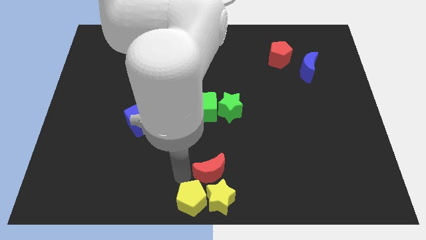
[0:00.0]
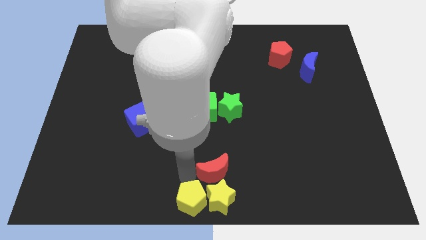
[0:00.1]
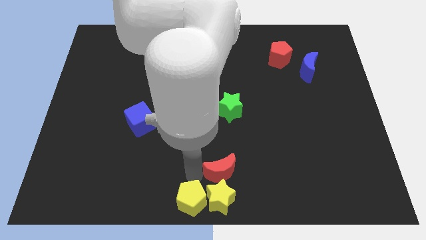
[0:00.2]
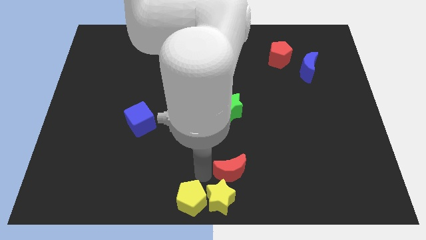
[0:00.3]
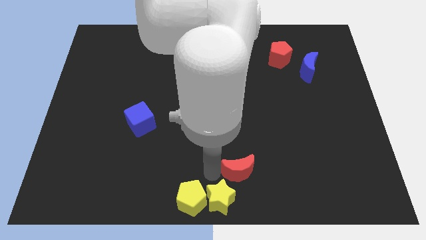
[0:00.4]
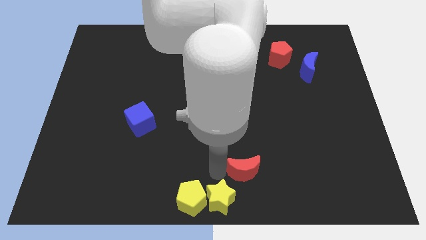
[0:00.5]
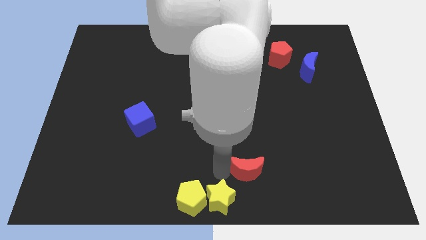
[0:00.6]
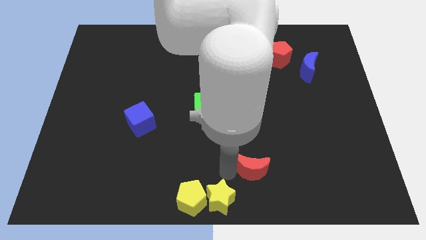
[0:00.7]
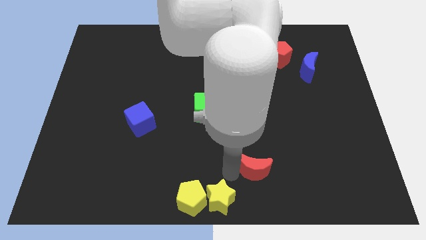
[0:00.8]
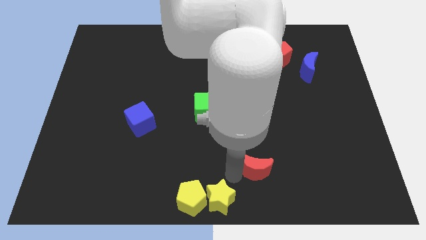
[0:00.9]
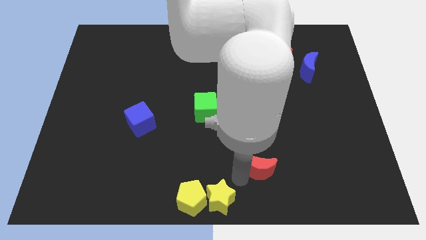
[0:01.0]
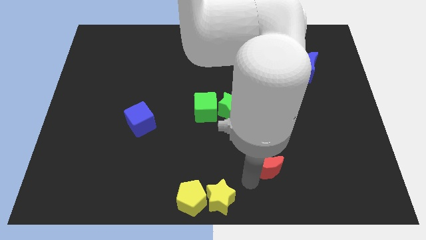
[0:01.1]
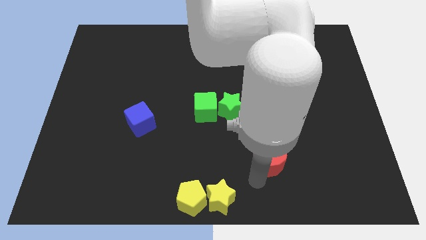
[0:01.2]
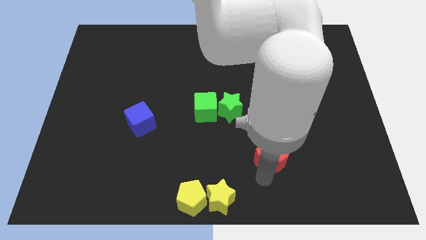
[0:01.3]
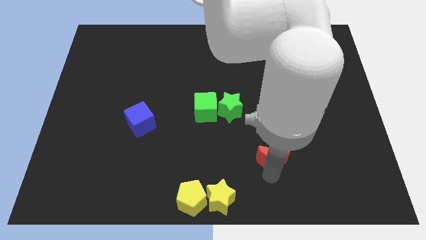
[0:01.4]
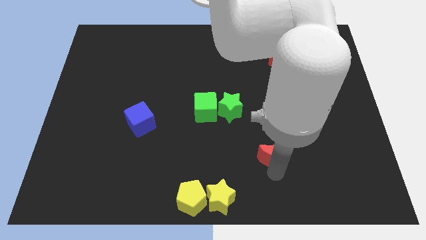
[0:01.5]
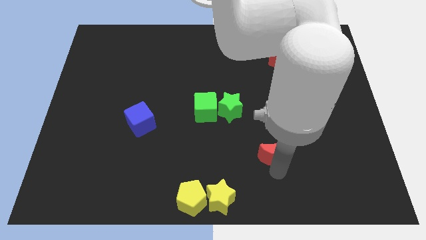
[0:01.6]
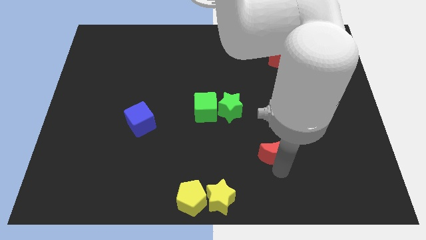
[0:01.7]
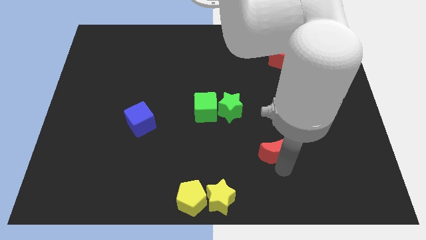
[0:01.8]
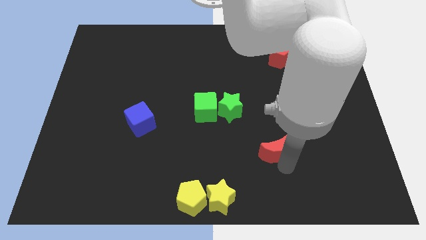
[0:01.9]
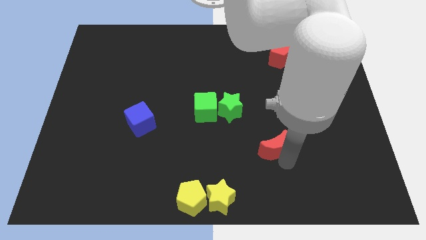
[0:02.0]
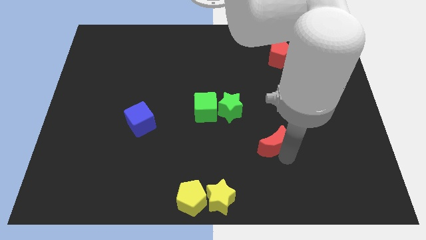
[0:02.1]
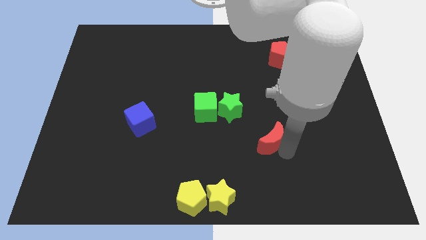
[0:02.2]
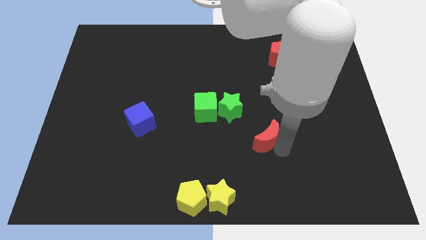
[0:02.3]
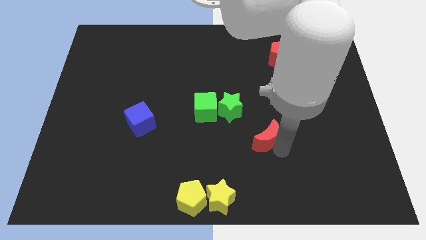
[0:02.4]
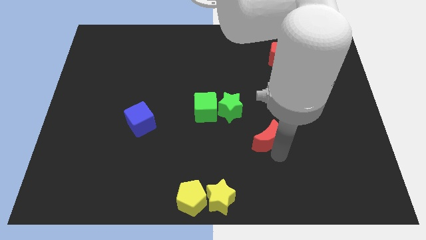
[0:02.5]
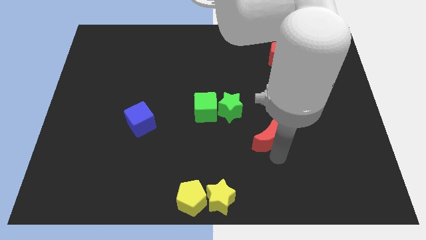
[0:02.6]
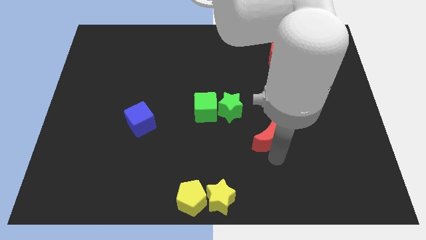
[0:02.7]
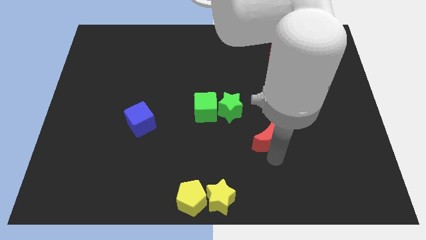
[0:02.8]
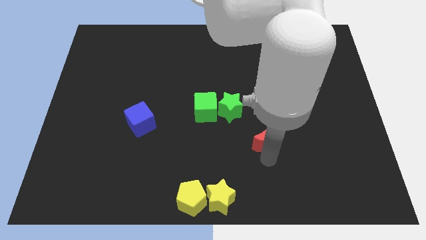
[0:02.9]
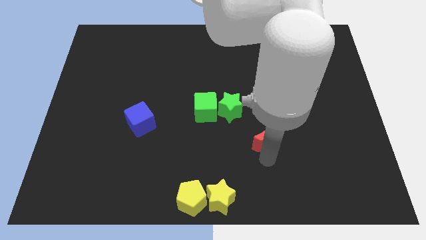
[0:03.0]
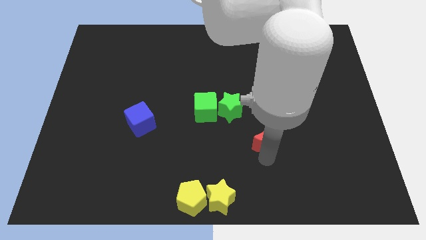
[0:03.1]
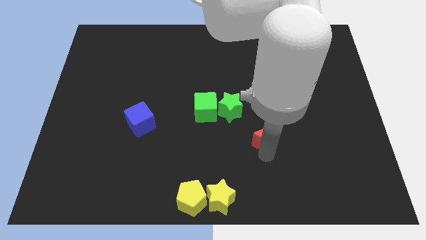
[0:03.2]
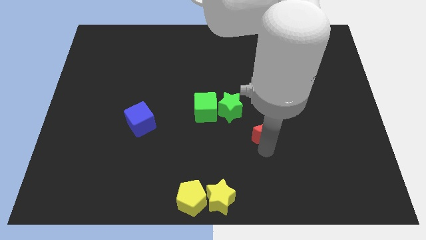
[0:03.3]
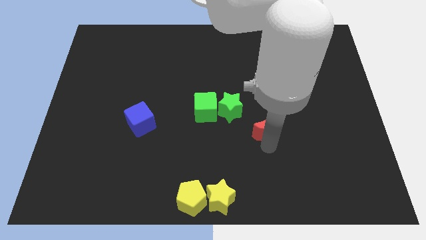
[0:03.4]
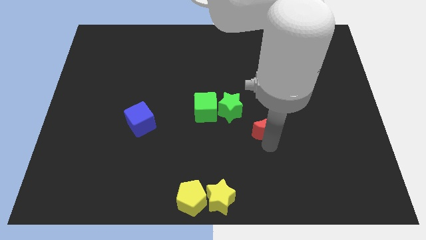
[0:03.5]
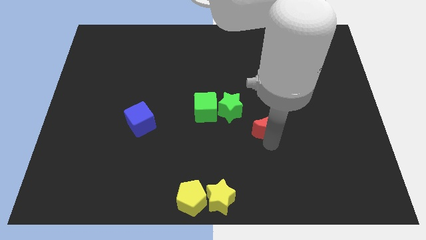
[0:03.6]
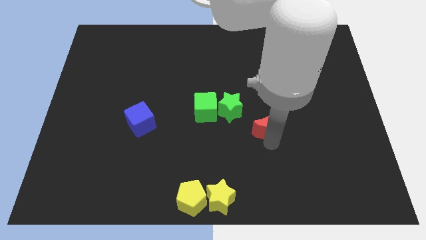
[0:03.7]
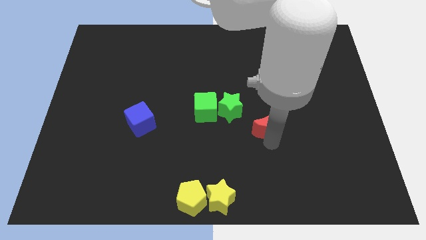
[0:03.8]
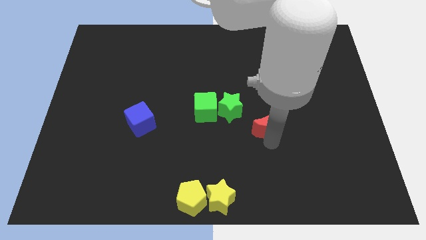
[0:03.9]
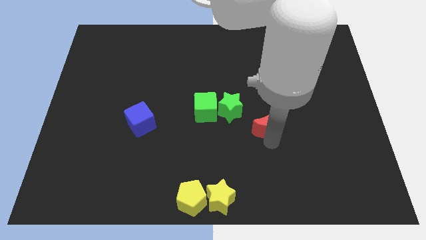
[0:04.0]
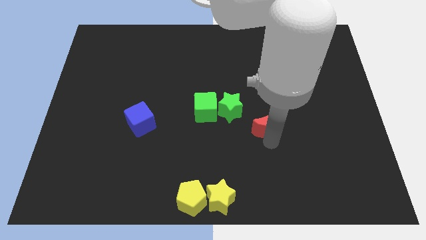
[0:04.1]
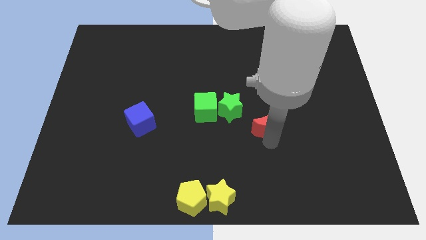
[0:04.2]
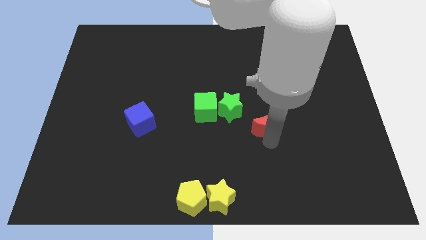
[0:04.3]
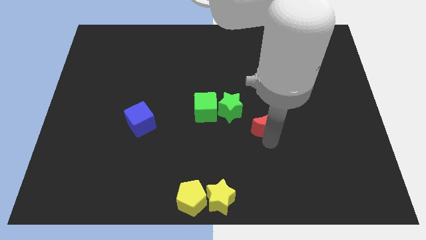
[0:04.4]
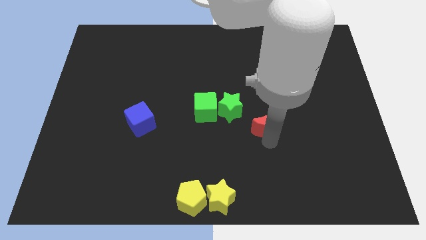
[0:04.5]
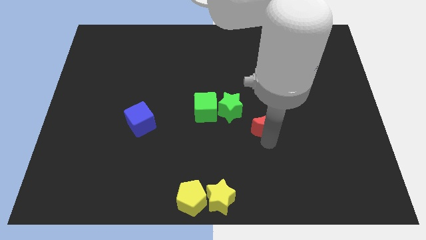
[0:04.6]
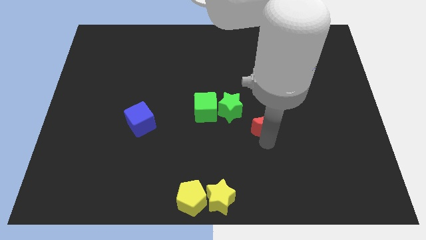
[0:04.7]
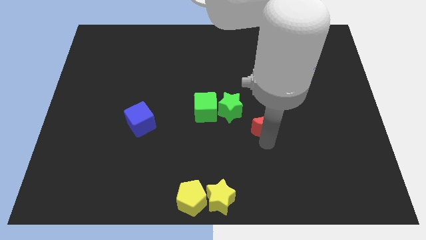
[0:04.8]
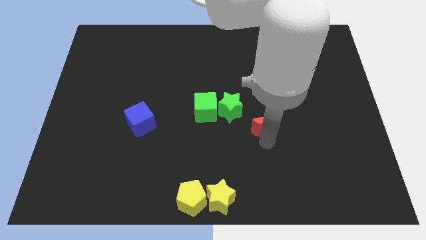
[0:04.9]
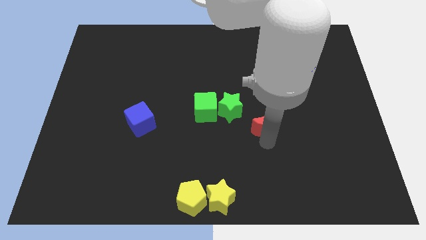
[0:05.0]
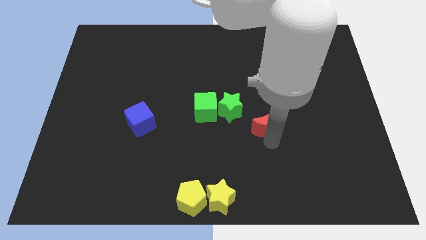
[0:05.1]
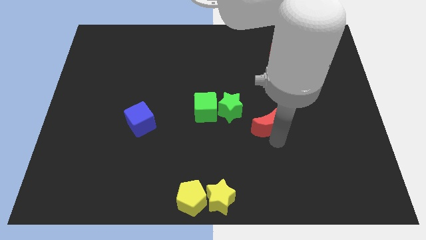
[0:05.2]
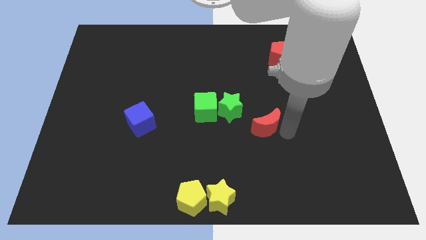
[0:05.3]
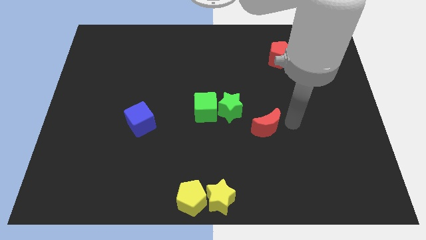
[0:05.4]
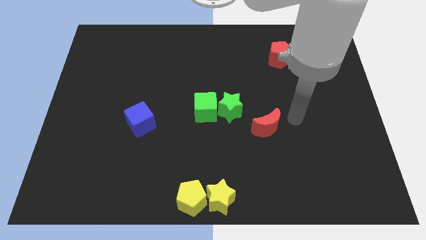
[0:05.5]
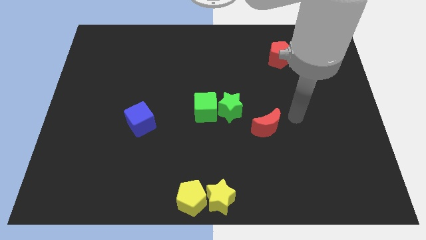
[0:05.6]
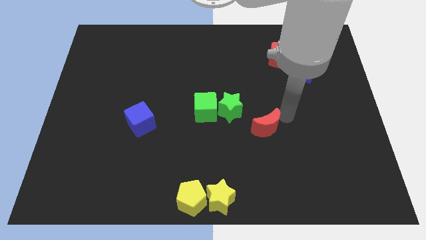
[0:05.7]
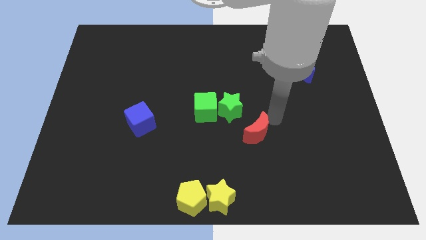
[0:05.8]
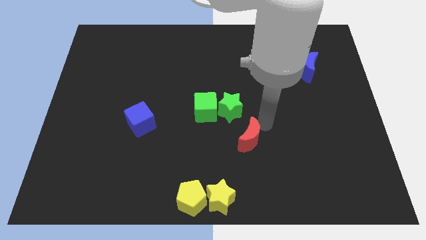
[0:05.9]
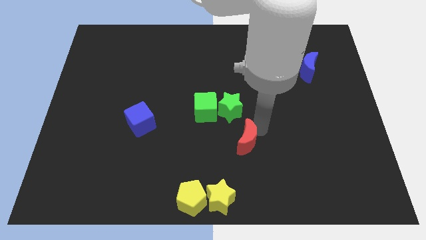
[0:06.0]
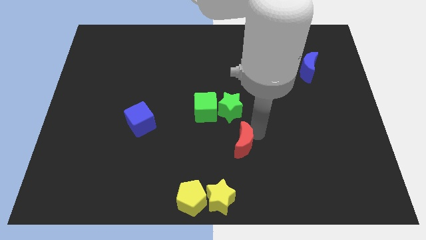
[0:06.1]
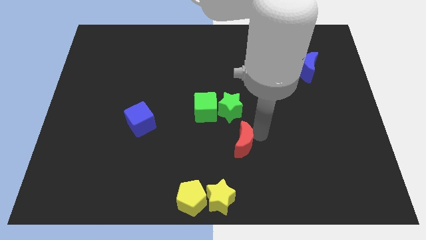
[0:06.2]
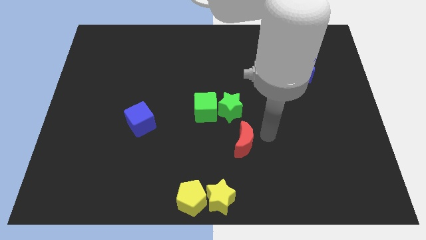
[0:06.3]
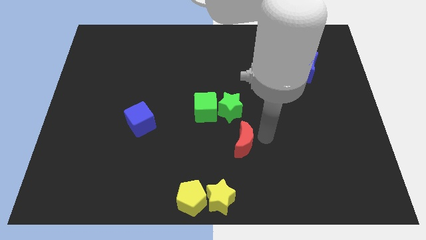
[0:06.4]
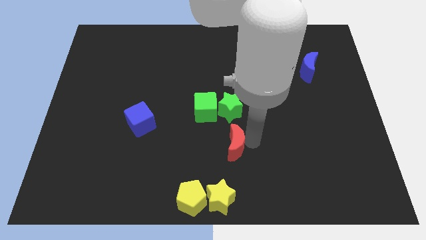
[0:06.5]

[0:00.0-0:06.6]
move the red crescent to the bottom side of the green star

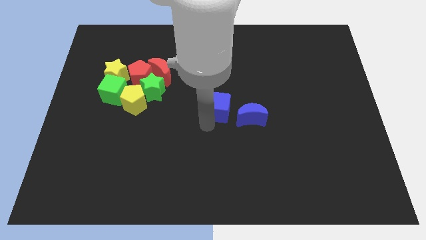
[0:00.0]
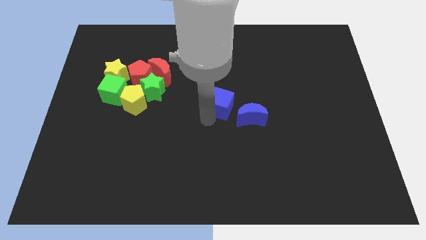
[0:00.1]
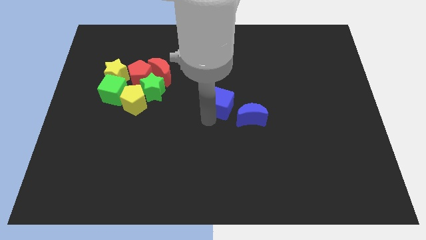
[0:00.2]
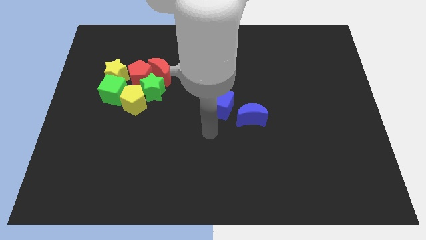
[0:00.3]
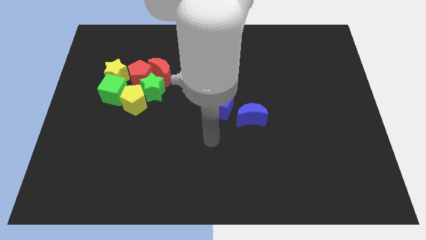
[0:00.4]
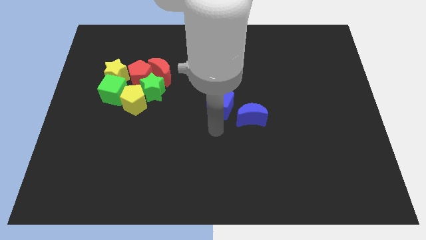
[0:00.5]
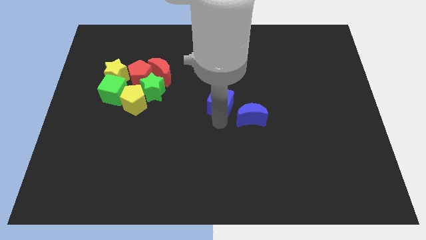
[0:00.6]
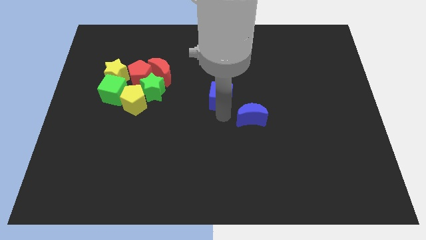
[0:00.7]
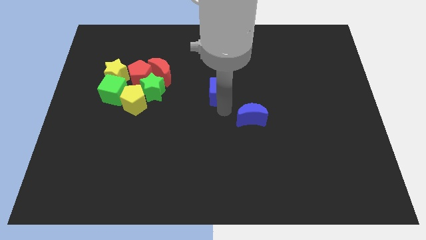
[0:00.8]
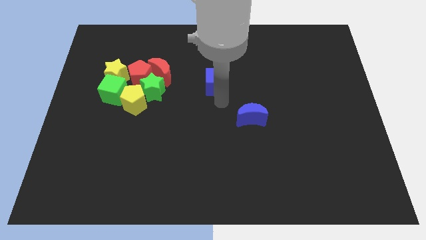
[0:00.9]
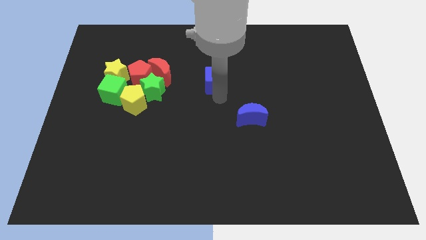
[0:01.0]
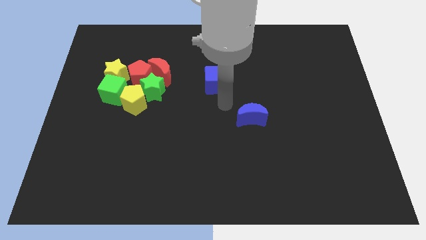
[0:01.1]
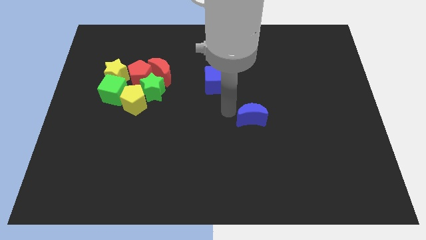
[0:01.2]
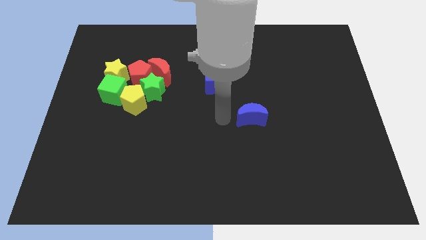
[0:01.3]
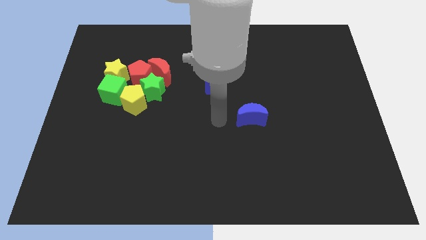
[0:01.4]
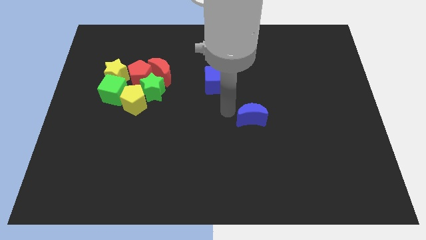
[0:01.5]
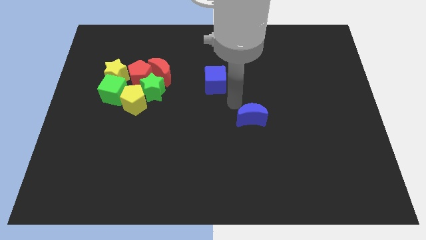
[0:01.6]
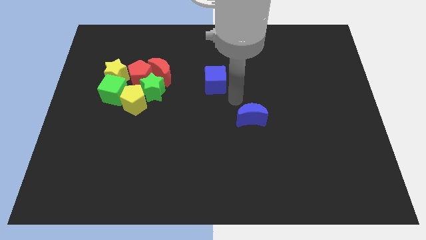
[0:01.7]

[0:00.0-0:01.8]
push the blue cube towards the top of the board

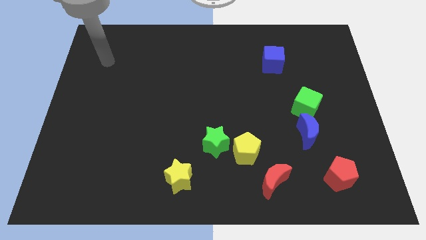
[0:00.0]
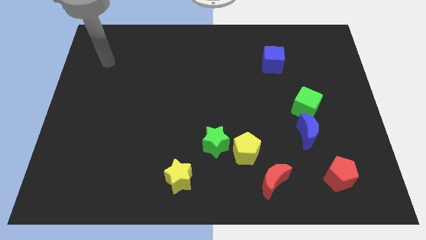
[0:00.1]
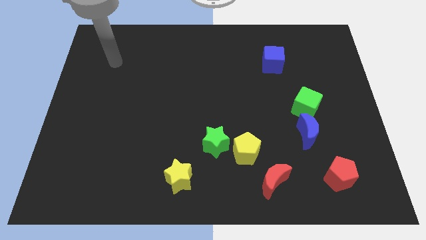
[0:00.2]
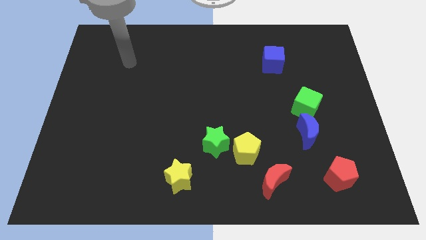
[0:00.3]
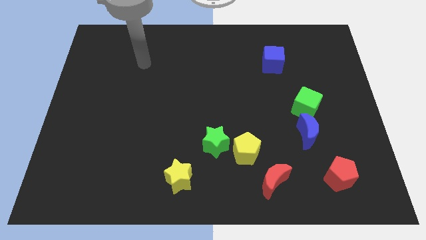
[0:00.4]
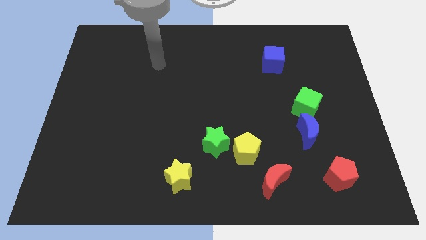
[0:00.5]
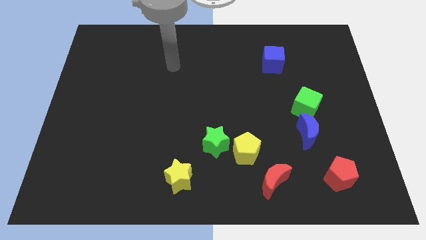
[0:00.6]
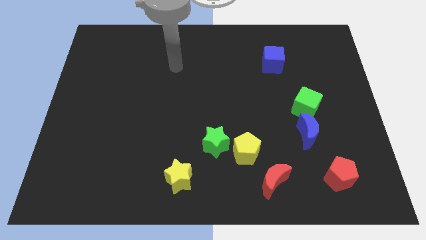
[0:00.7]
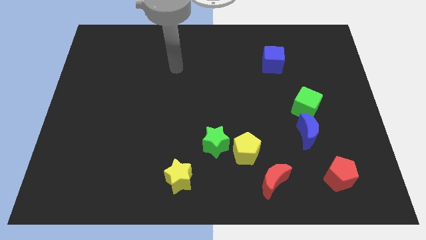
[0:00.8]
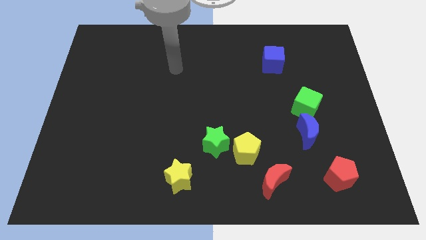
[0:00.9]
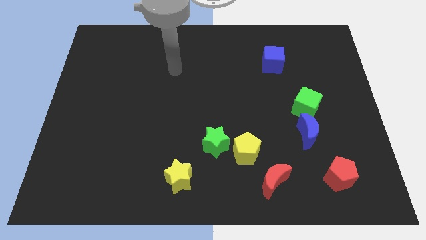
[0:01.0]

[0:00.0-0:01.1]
point the arm to the left of the blue cube
